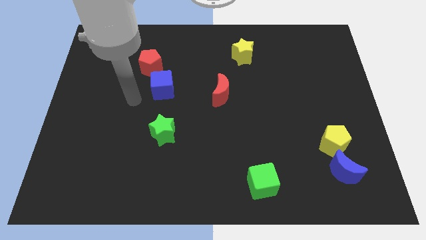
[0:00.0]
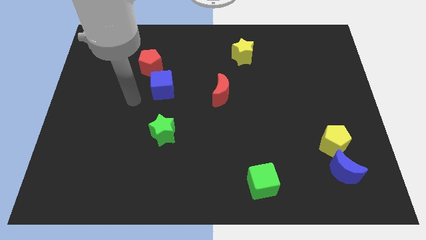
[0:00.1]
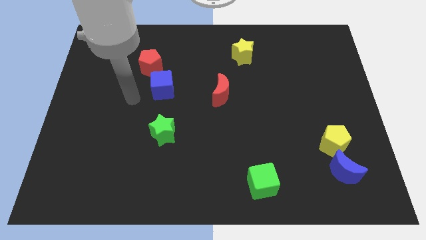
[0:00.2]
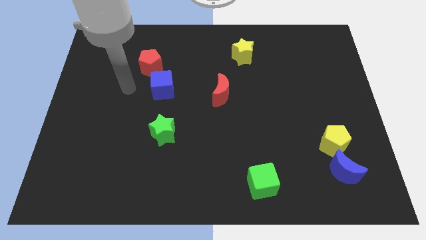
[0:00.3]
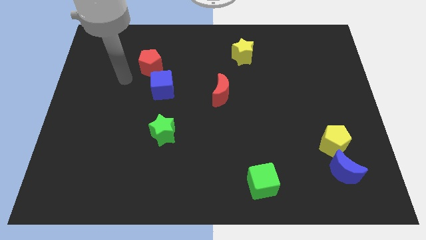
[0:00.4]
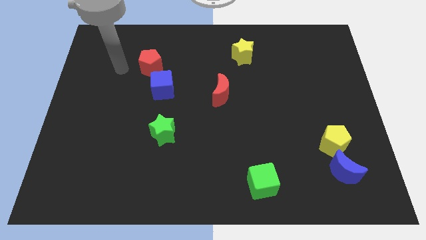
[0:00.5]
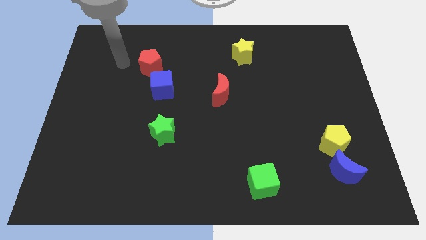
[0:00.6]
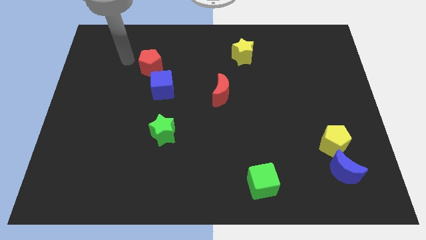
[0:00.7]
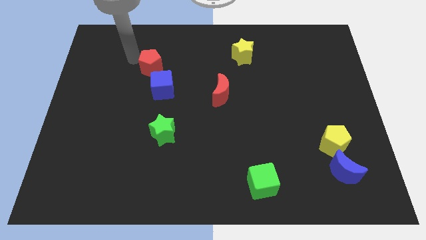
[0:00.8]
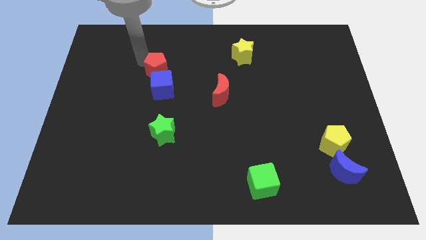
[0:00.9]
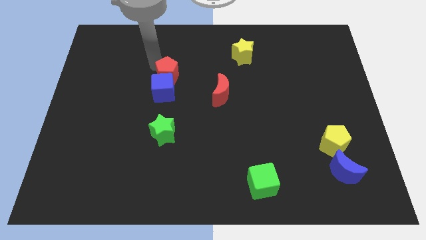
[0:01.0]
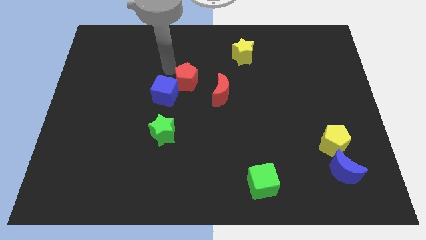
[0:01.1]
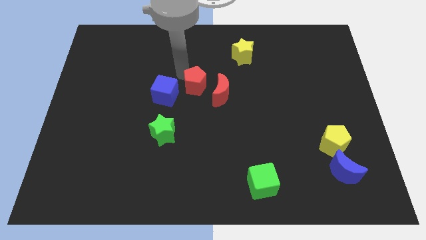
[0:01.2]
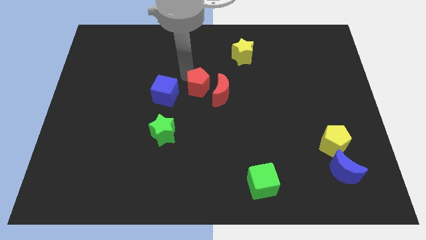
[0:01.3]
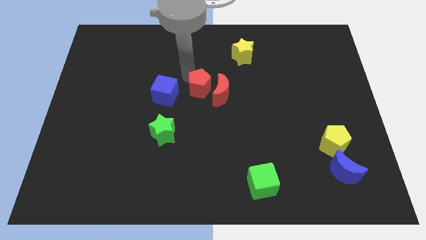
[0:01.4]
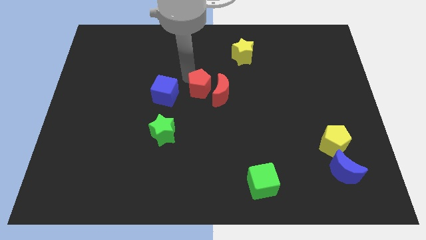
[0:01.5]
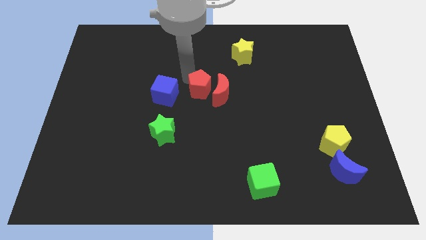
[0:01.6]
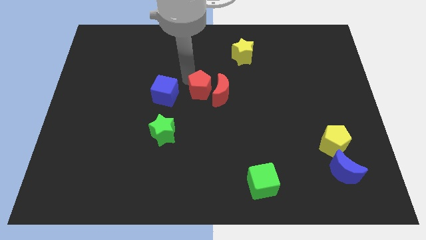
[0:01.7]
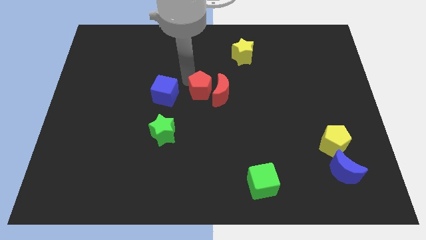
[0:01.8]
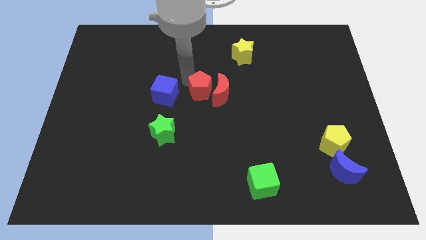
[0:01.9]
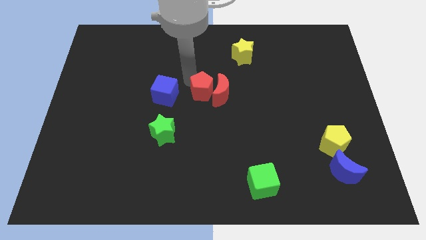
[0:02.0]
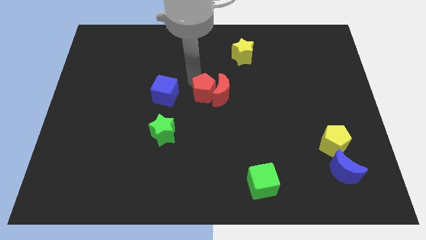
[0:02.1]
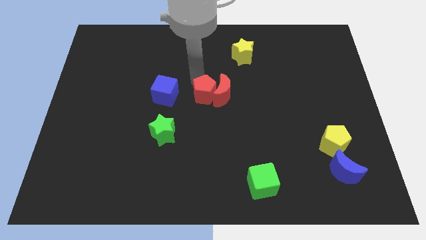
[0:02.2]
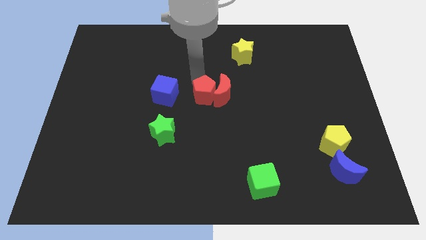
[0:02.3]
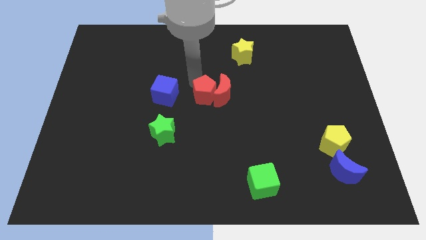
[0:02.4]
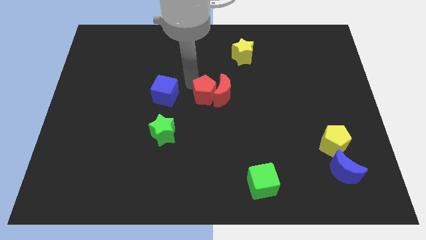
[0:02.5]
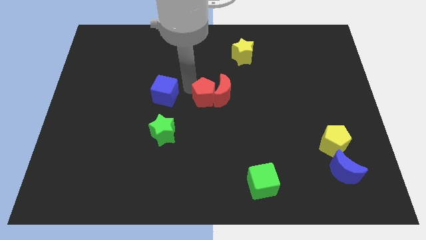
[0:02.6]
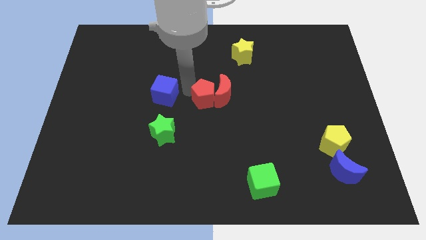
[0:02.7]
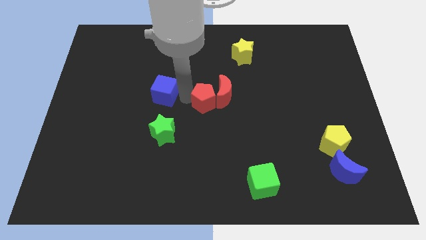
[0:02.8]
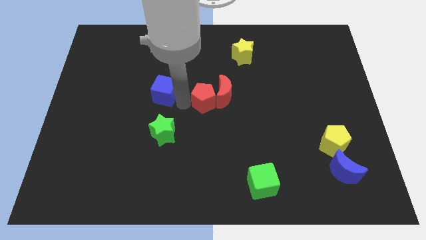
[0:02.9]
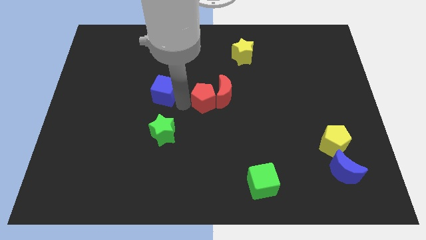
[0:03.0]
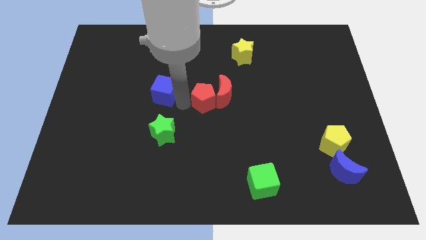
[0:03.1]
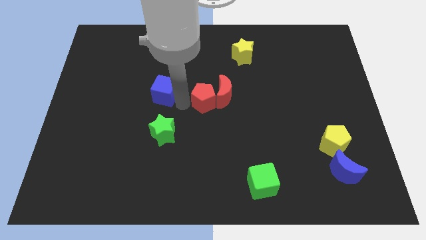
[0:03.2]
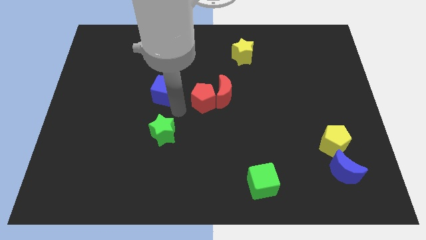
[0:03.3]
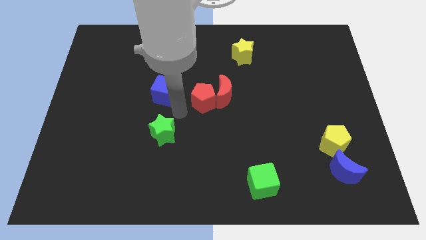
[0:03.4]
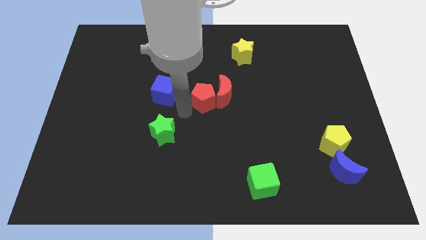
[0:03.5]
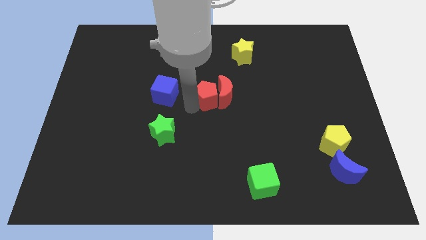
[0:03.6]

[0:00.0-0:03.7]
push the red pentagon into the red moon

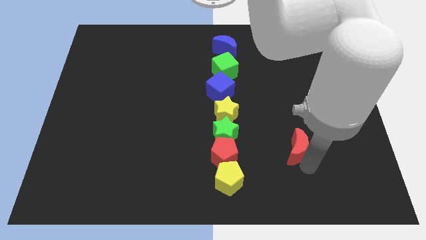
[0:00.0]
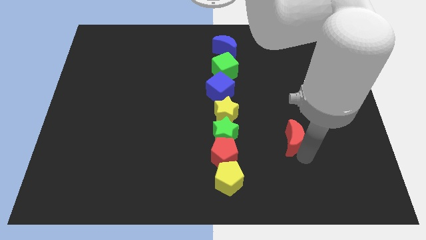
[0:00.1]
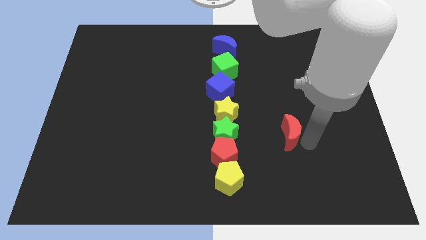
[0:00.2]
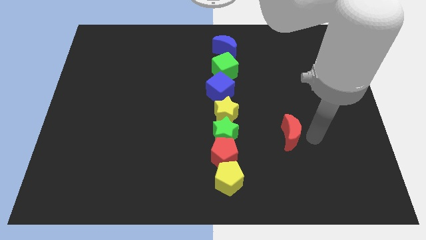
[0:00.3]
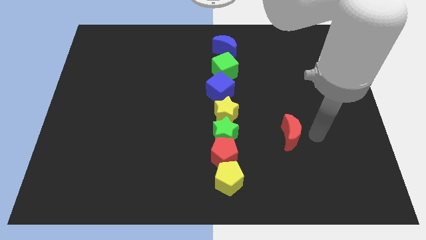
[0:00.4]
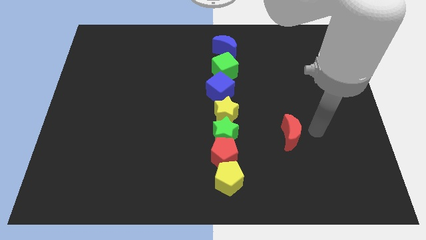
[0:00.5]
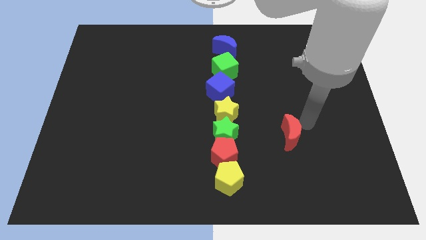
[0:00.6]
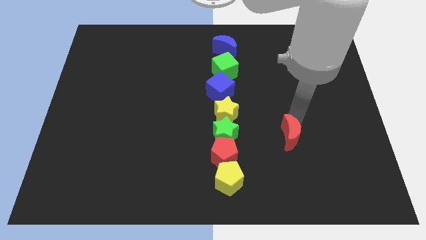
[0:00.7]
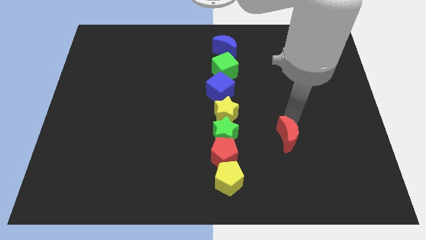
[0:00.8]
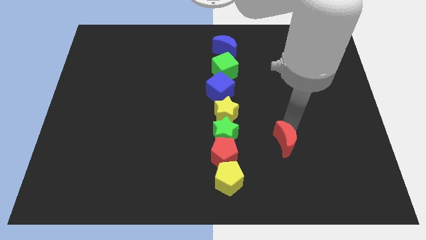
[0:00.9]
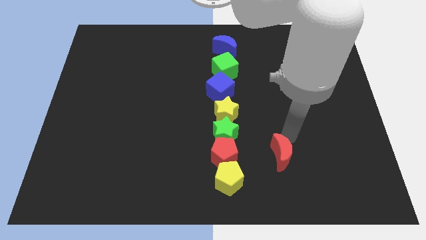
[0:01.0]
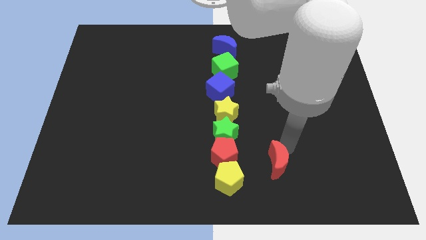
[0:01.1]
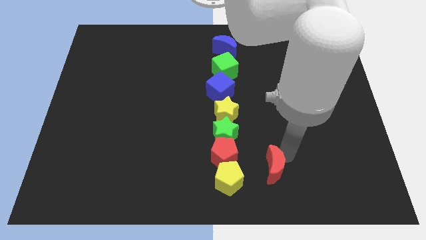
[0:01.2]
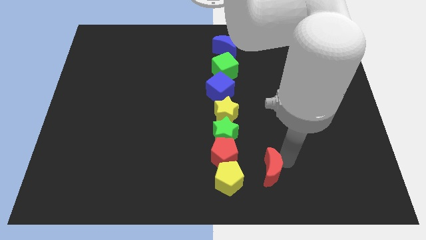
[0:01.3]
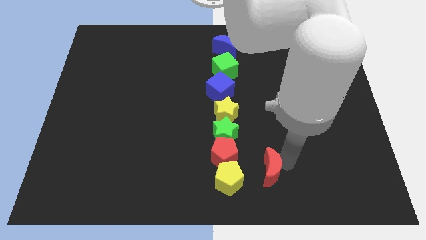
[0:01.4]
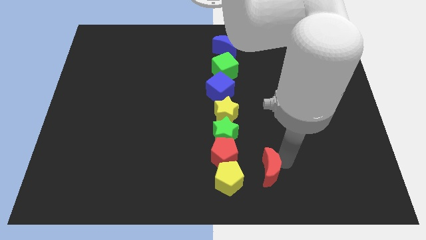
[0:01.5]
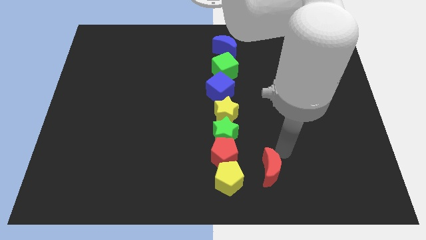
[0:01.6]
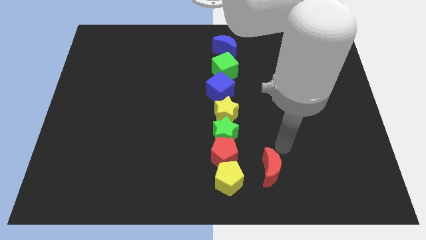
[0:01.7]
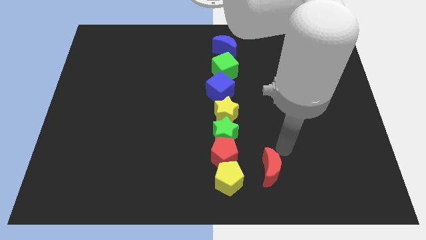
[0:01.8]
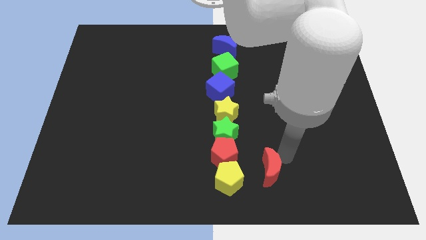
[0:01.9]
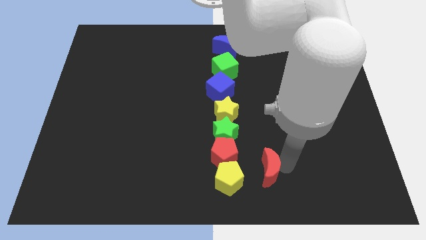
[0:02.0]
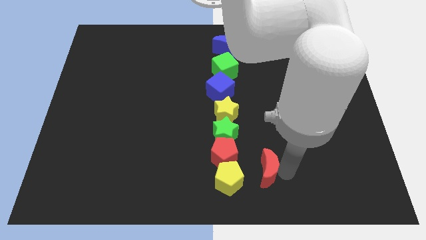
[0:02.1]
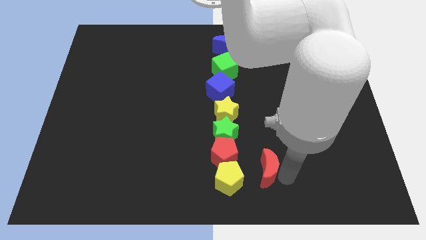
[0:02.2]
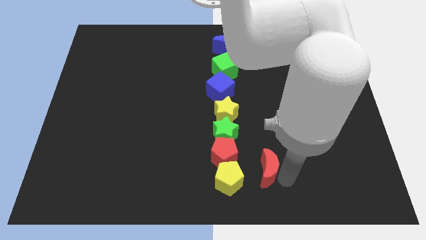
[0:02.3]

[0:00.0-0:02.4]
drag red moon towards vertical line of blocks

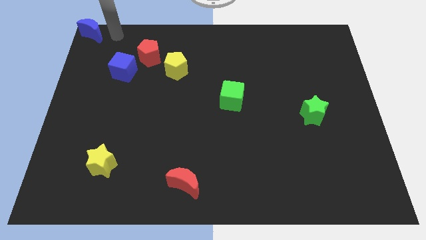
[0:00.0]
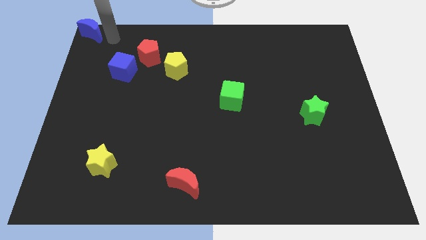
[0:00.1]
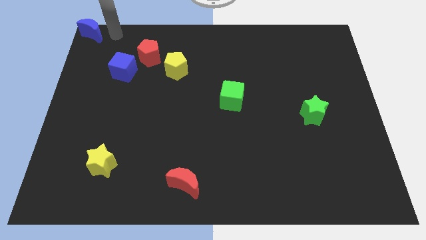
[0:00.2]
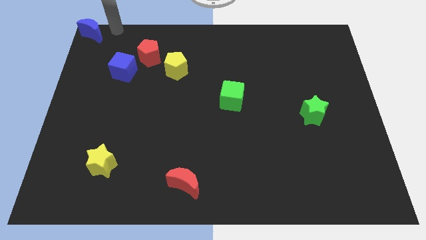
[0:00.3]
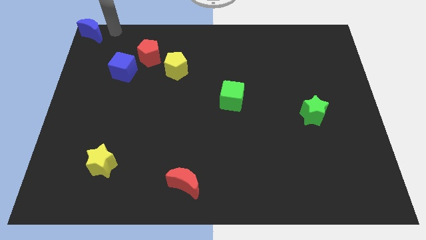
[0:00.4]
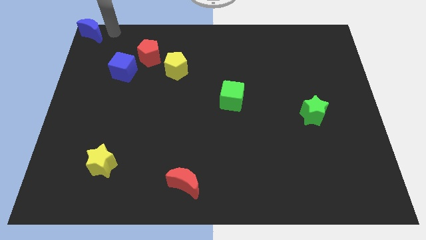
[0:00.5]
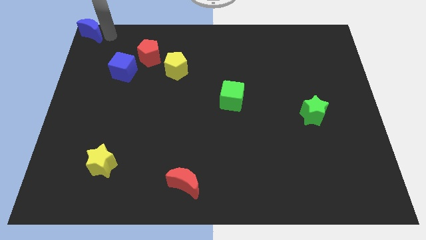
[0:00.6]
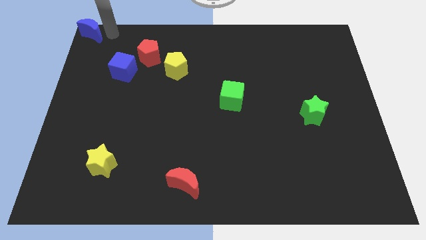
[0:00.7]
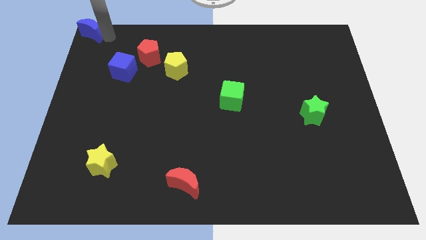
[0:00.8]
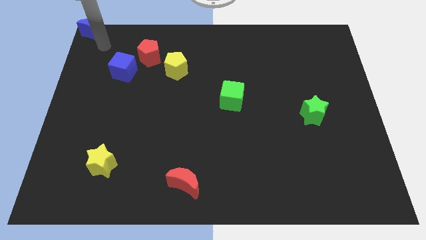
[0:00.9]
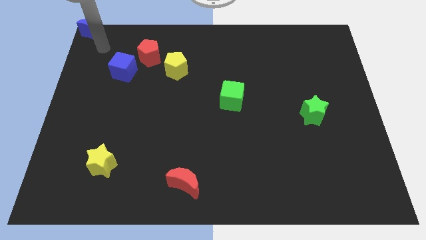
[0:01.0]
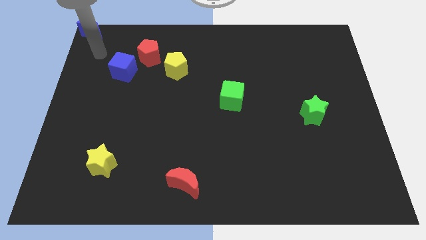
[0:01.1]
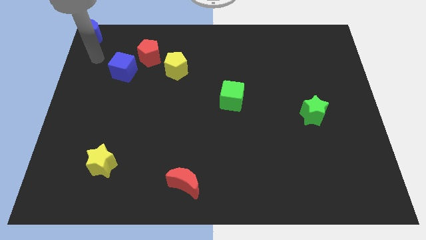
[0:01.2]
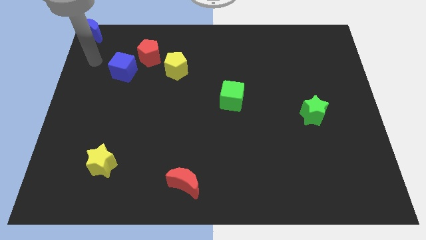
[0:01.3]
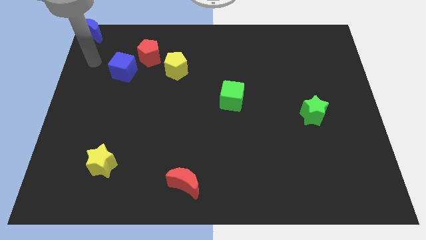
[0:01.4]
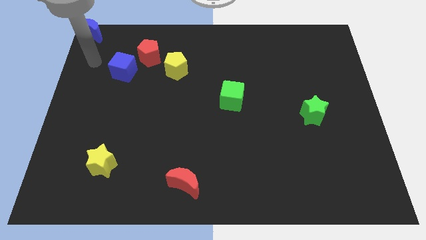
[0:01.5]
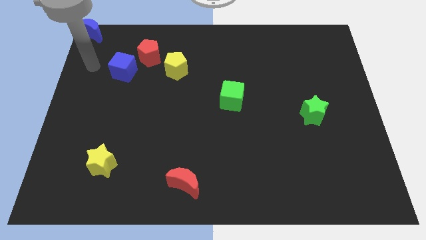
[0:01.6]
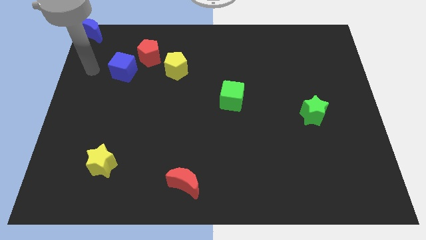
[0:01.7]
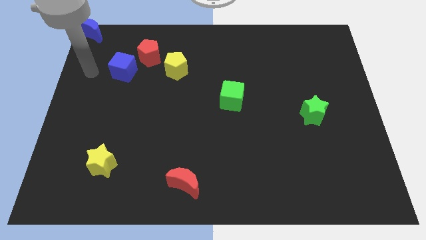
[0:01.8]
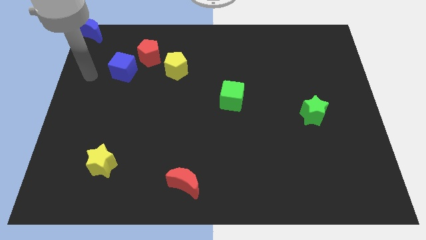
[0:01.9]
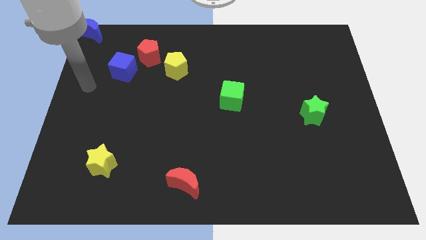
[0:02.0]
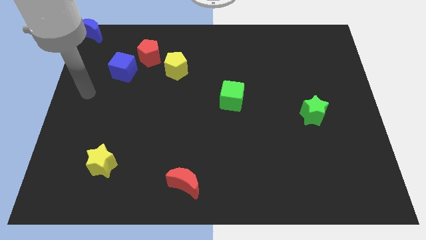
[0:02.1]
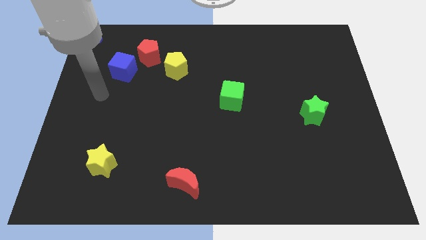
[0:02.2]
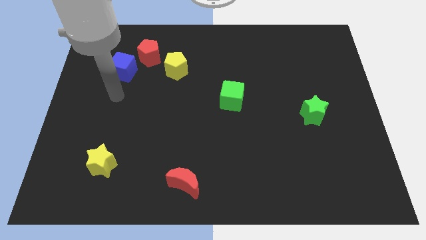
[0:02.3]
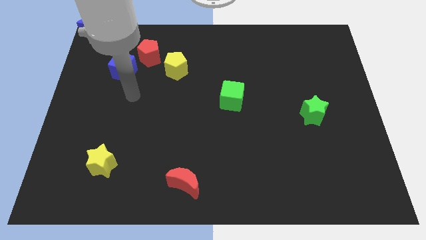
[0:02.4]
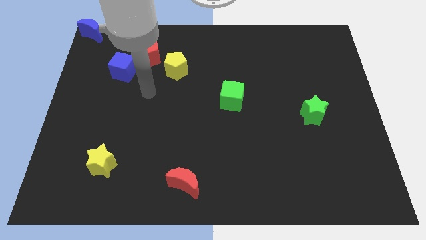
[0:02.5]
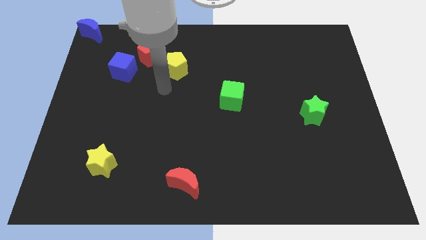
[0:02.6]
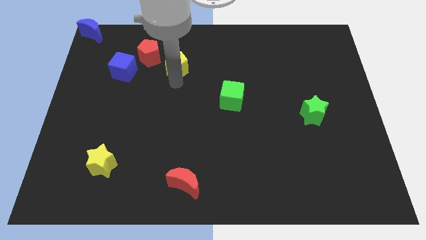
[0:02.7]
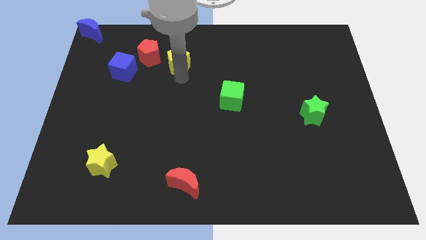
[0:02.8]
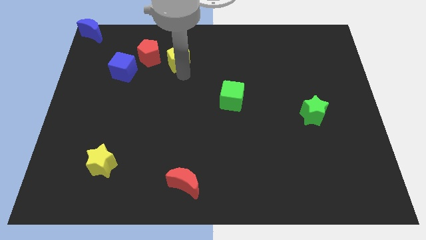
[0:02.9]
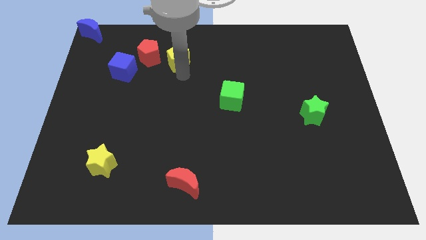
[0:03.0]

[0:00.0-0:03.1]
go away from the blue moon
